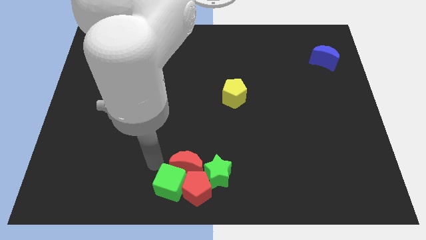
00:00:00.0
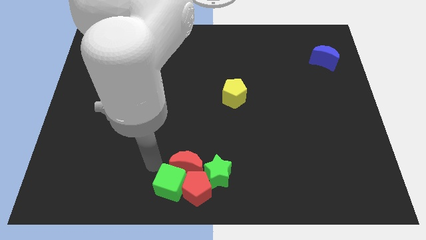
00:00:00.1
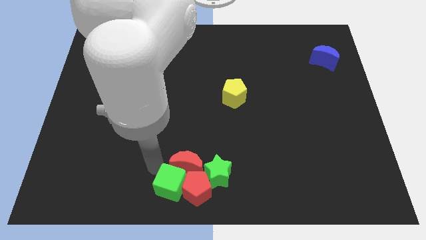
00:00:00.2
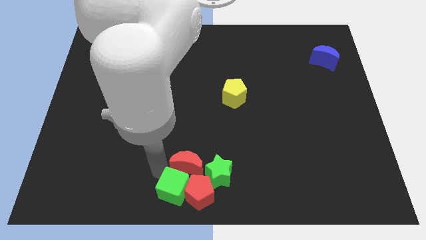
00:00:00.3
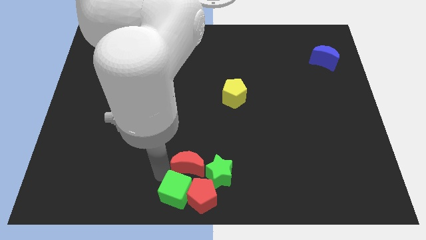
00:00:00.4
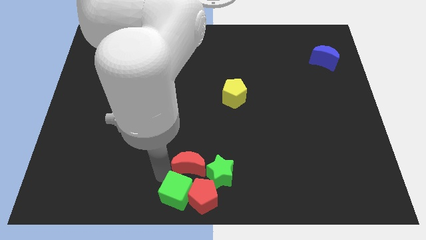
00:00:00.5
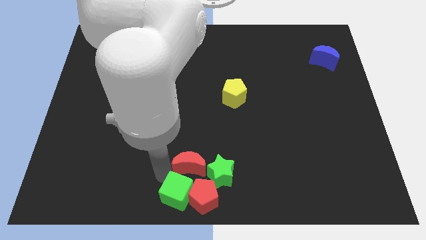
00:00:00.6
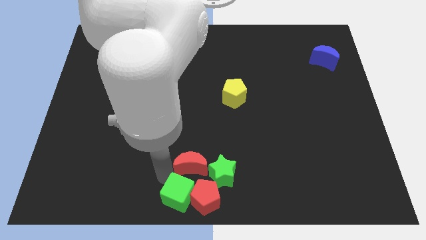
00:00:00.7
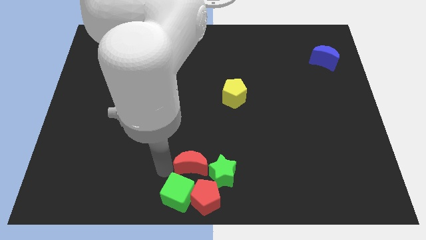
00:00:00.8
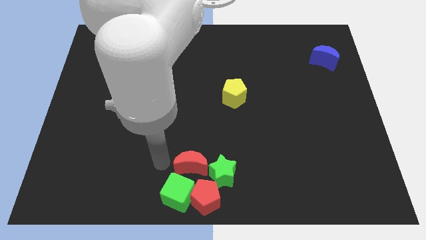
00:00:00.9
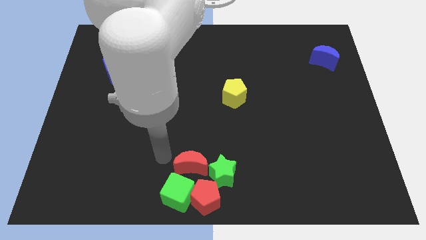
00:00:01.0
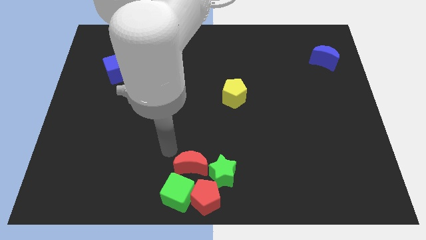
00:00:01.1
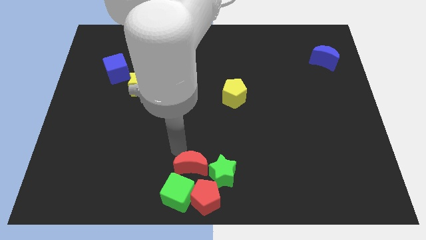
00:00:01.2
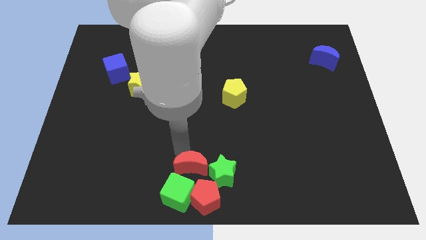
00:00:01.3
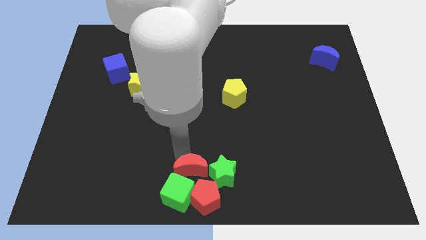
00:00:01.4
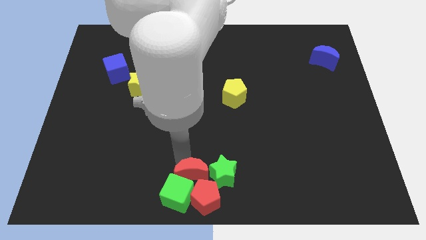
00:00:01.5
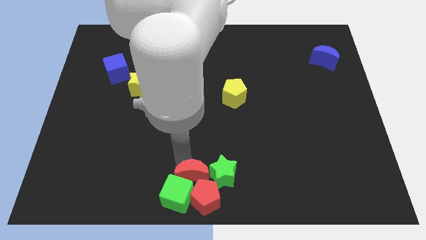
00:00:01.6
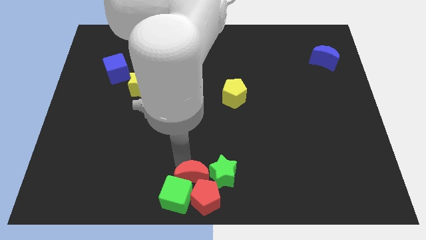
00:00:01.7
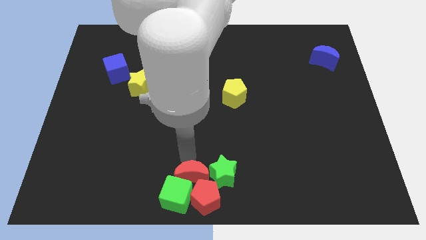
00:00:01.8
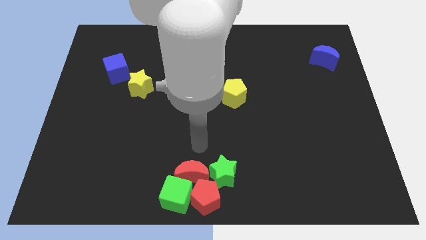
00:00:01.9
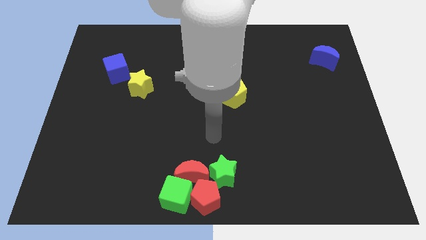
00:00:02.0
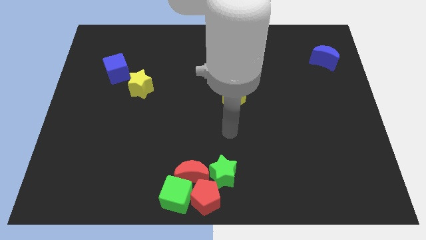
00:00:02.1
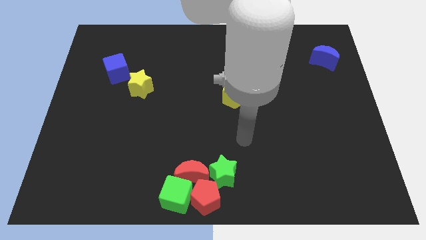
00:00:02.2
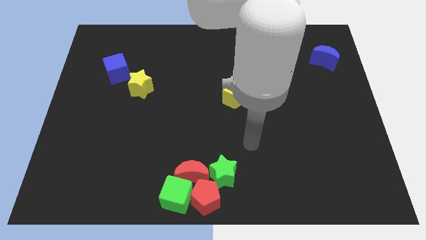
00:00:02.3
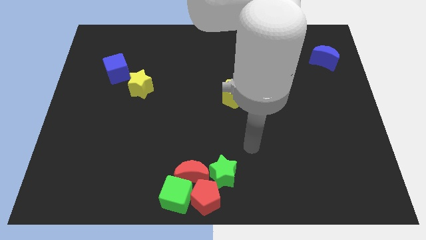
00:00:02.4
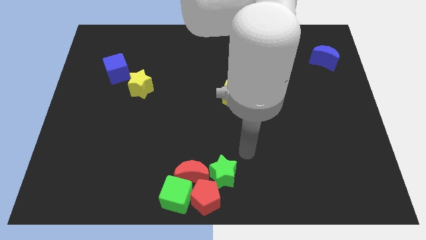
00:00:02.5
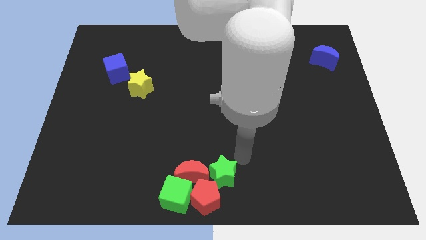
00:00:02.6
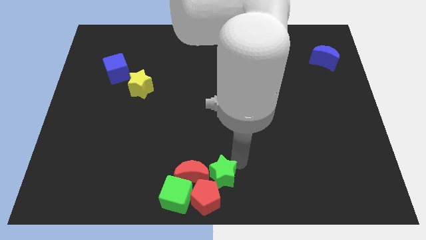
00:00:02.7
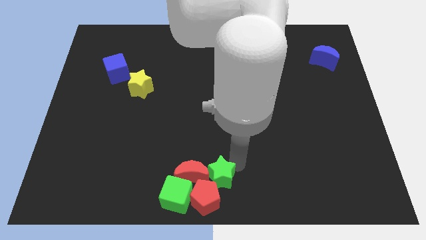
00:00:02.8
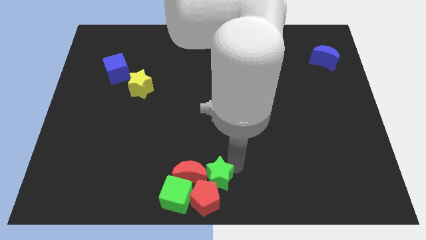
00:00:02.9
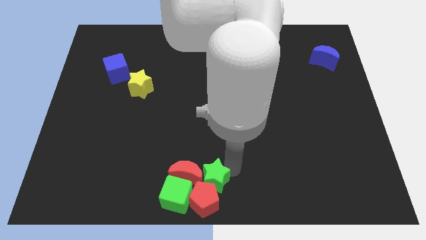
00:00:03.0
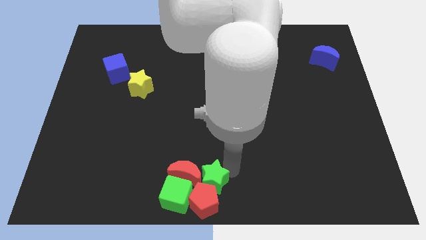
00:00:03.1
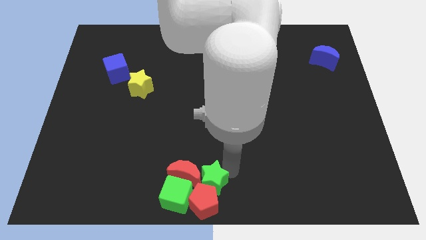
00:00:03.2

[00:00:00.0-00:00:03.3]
adjust the green and red blocks at the bottom center side

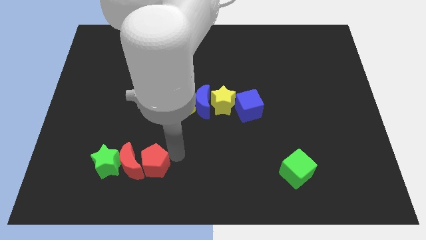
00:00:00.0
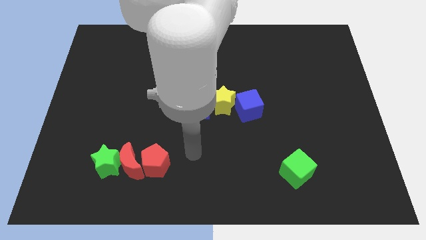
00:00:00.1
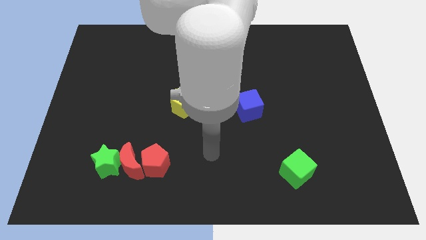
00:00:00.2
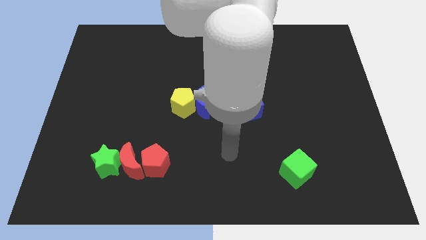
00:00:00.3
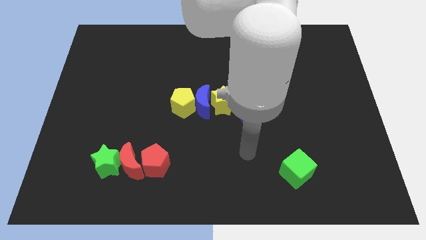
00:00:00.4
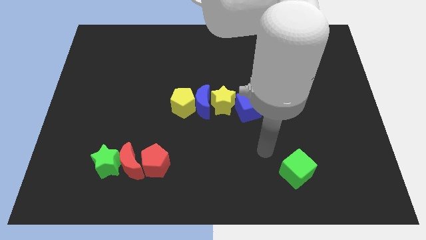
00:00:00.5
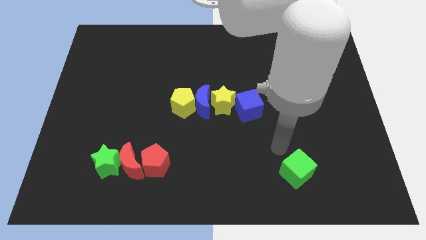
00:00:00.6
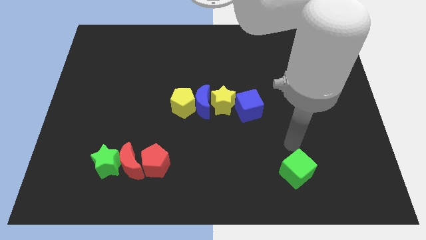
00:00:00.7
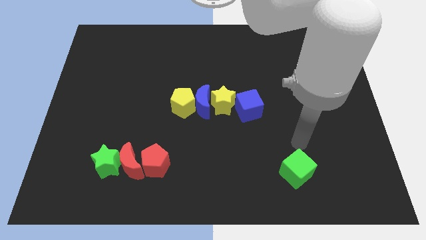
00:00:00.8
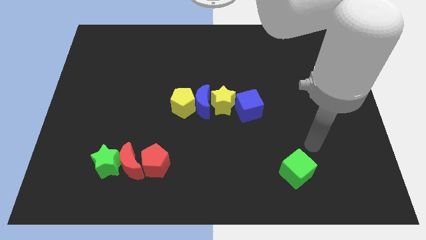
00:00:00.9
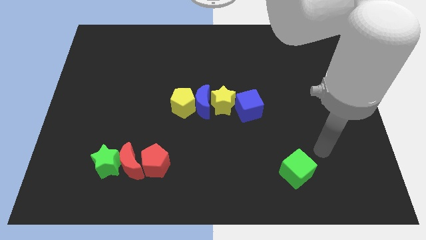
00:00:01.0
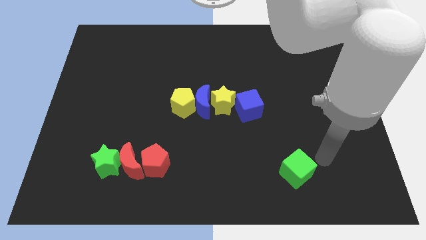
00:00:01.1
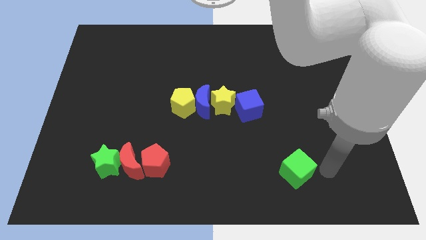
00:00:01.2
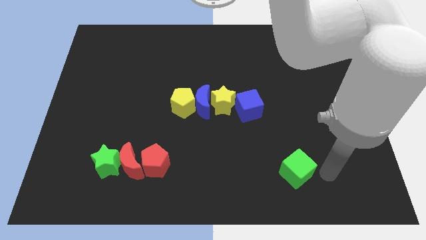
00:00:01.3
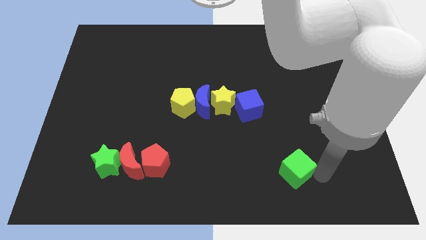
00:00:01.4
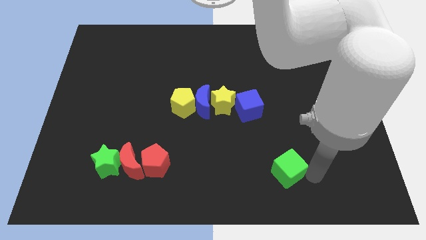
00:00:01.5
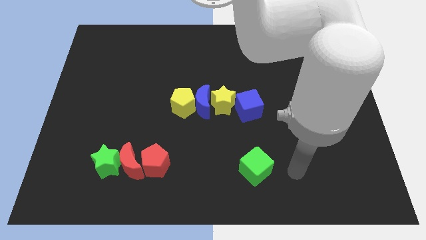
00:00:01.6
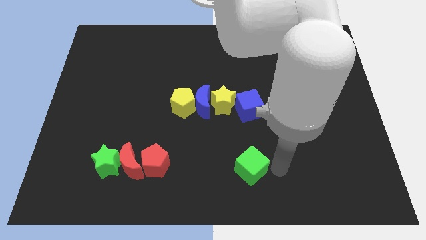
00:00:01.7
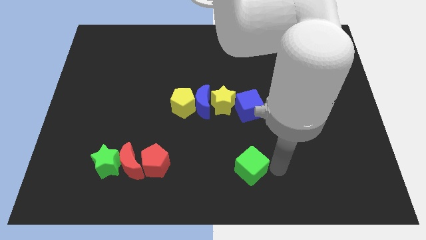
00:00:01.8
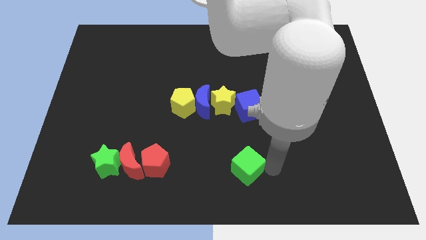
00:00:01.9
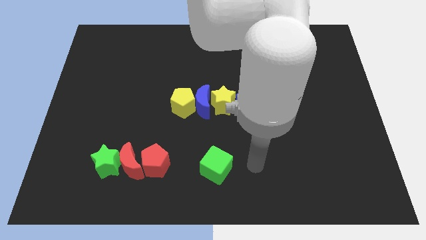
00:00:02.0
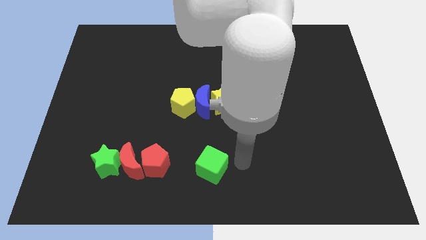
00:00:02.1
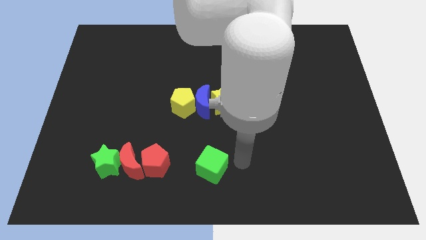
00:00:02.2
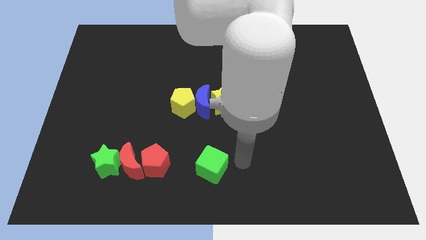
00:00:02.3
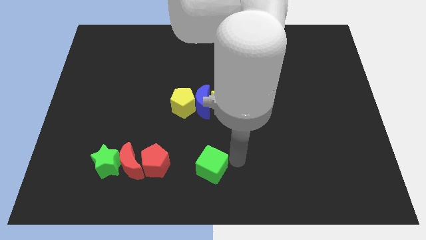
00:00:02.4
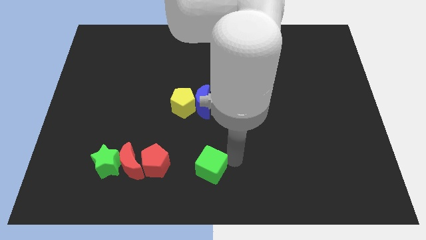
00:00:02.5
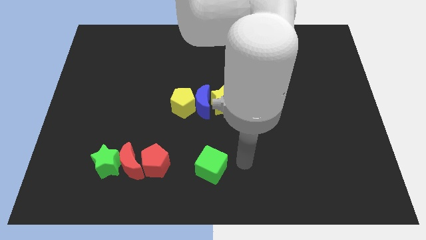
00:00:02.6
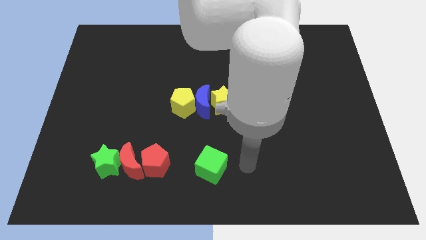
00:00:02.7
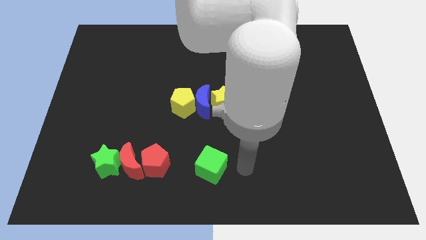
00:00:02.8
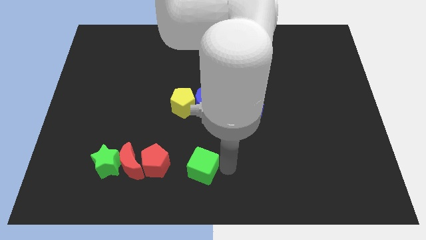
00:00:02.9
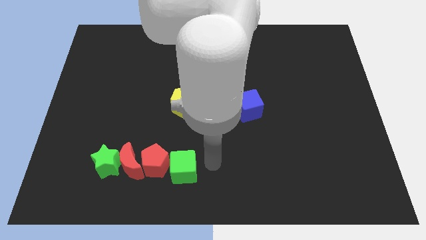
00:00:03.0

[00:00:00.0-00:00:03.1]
move the green cube close to the right side of the red pentagon

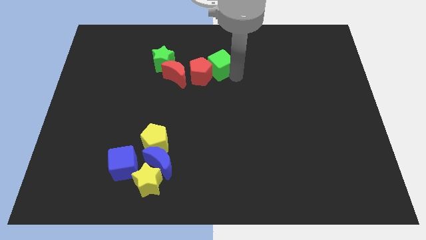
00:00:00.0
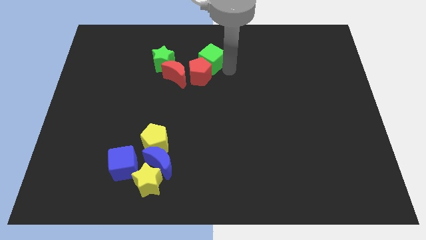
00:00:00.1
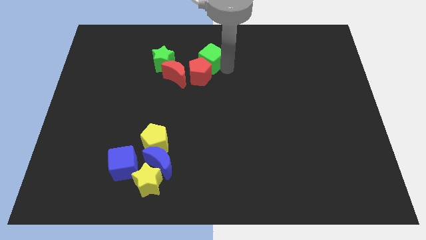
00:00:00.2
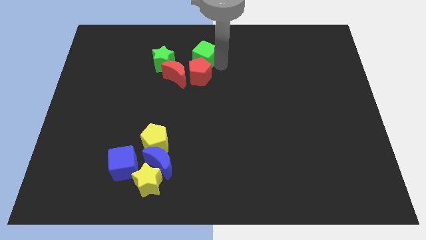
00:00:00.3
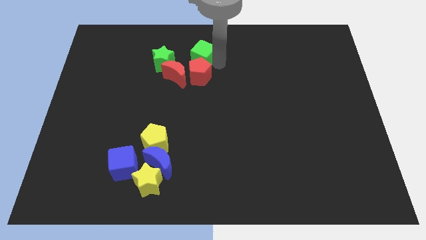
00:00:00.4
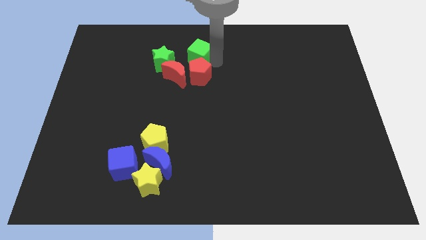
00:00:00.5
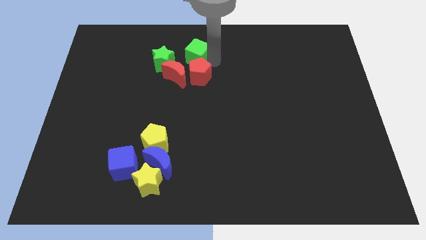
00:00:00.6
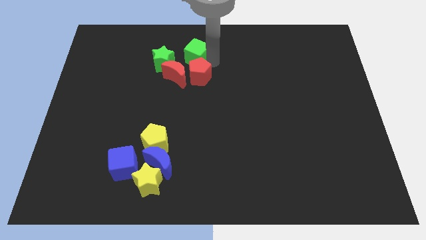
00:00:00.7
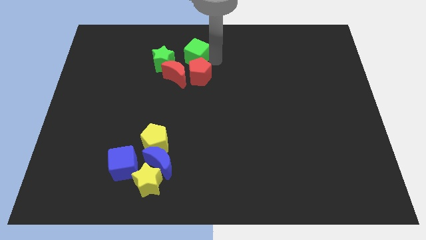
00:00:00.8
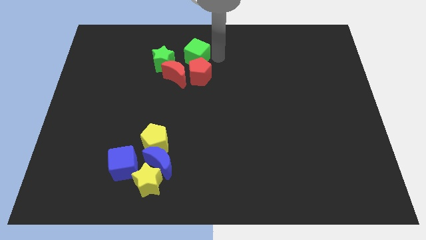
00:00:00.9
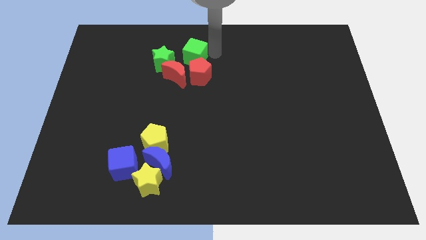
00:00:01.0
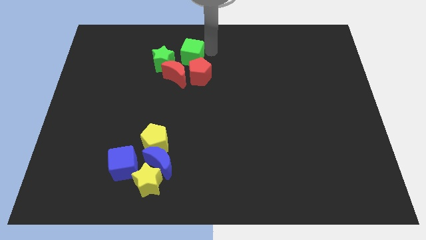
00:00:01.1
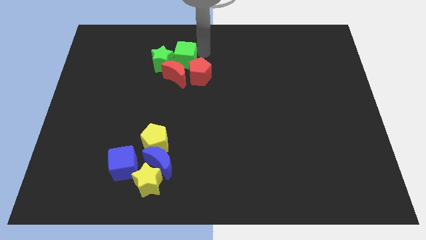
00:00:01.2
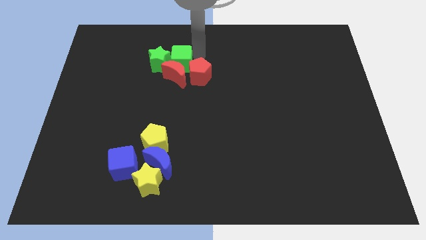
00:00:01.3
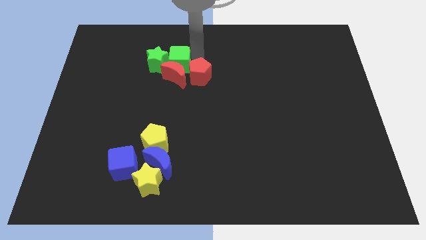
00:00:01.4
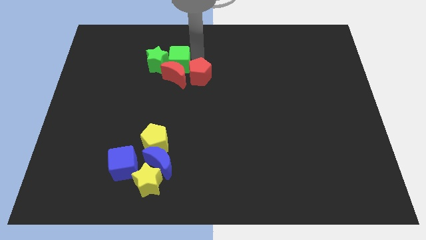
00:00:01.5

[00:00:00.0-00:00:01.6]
push the green cube into the green star

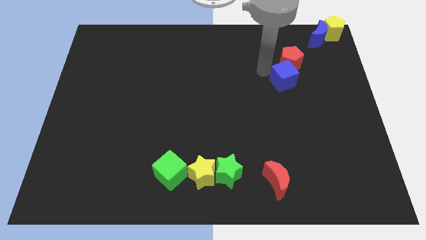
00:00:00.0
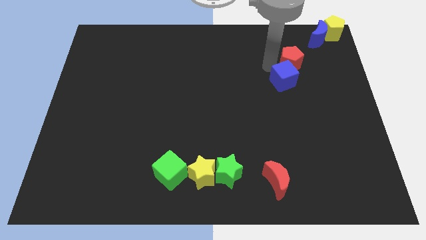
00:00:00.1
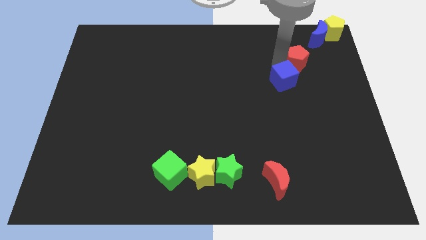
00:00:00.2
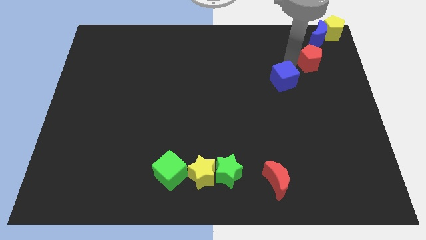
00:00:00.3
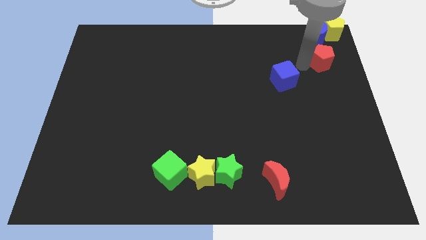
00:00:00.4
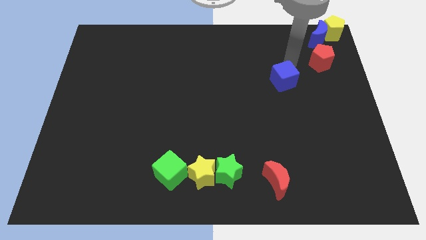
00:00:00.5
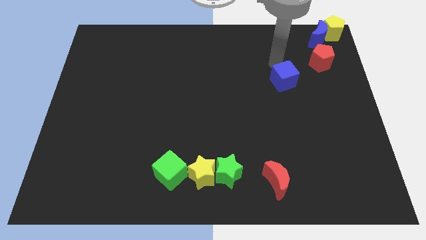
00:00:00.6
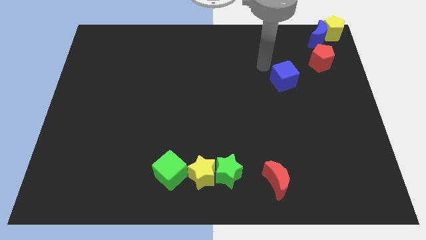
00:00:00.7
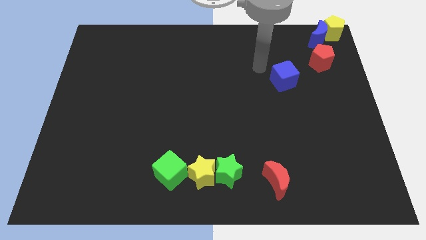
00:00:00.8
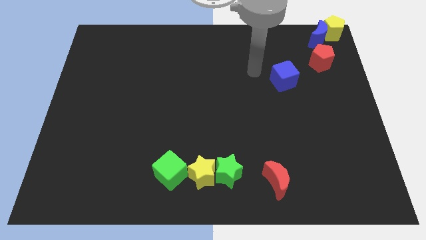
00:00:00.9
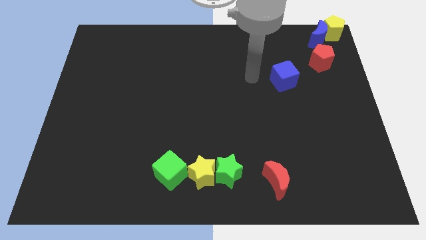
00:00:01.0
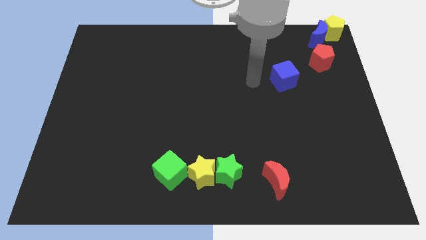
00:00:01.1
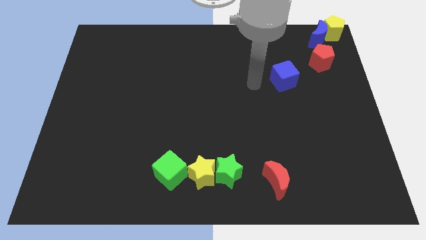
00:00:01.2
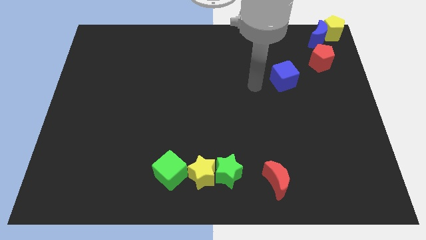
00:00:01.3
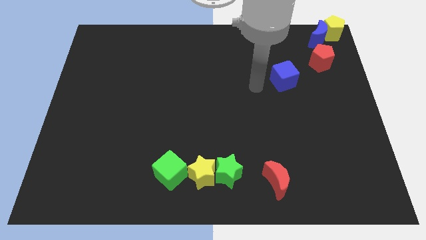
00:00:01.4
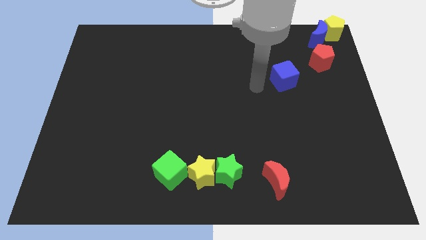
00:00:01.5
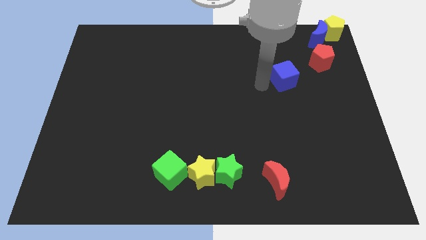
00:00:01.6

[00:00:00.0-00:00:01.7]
separate the red pentagon and the blue cube
